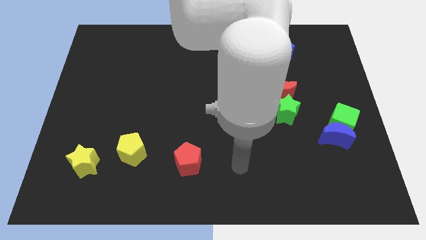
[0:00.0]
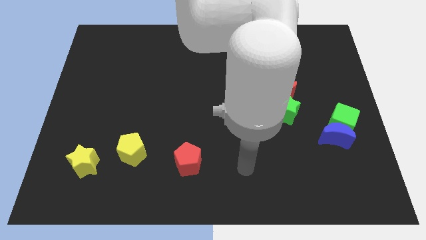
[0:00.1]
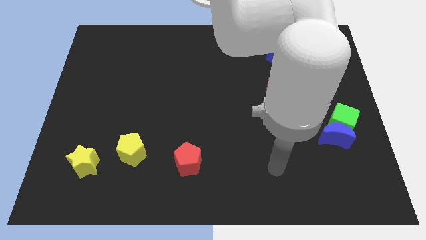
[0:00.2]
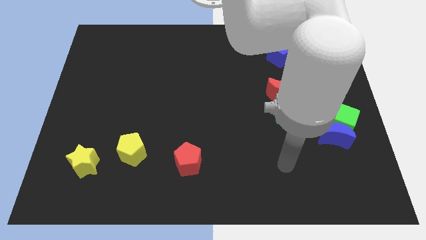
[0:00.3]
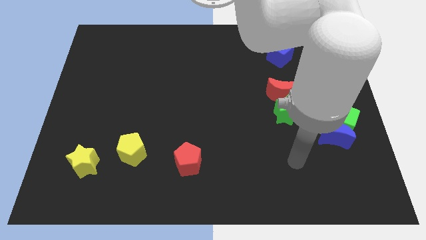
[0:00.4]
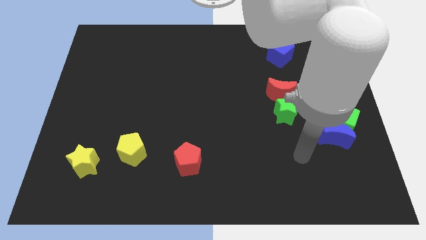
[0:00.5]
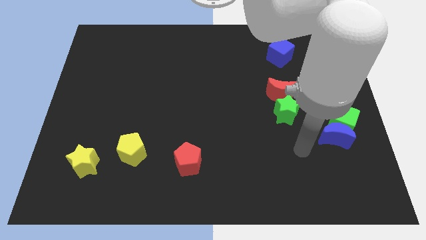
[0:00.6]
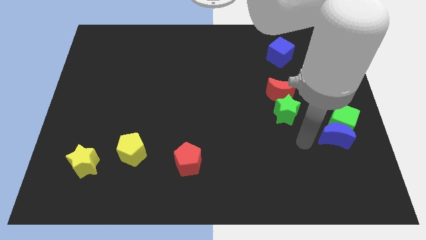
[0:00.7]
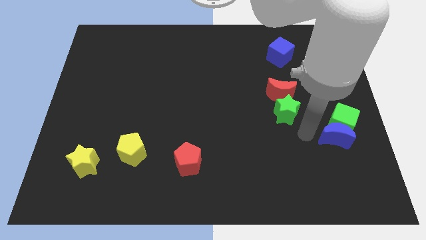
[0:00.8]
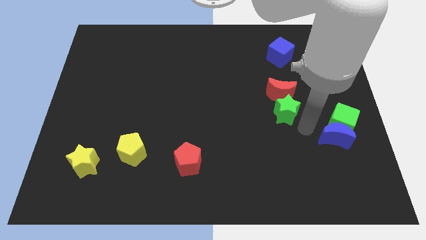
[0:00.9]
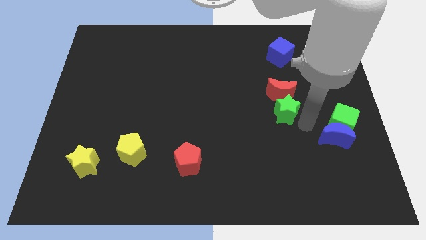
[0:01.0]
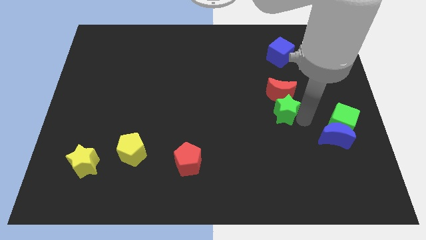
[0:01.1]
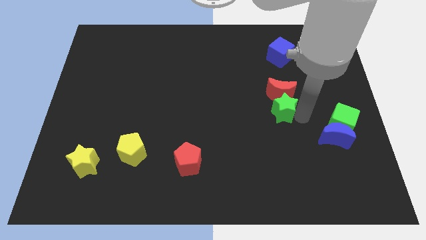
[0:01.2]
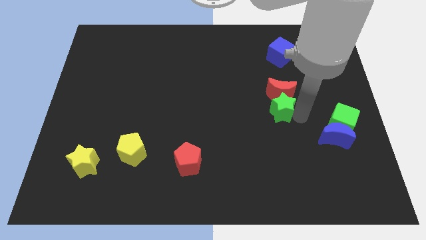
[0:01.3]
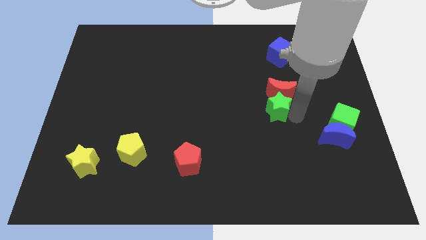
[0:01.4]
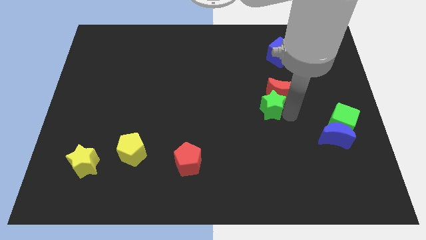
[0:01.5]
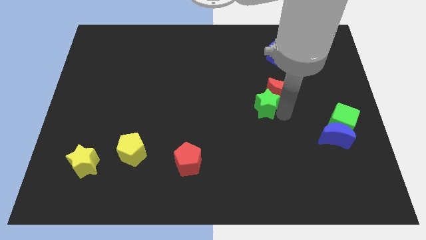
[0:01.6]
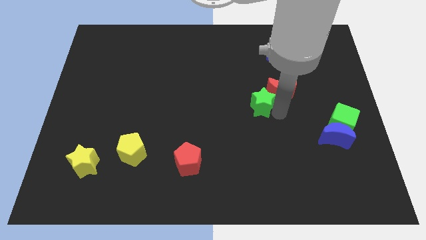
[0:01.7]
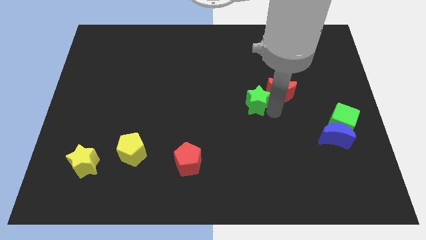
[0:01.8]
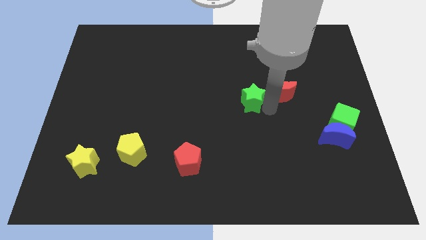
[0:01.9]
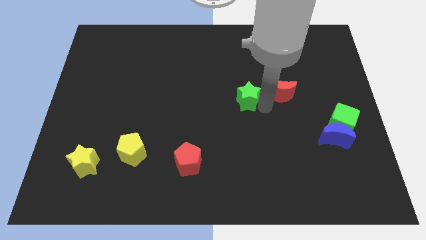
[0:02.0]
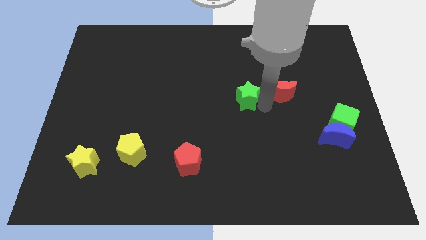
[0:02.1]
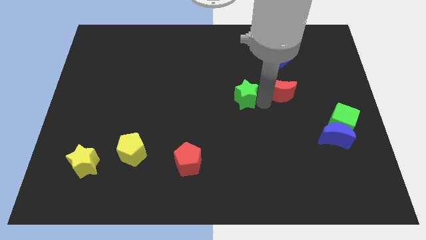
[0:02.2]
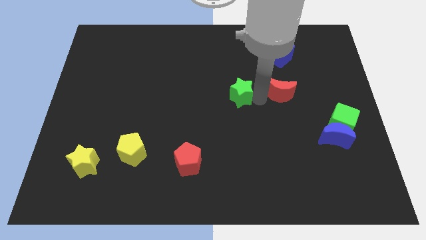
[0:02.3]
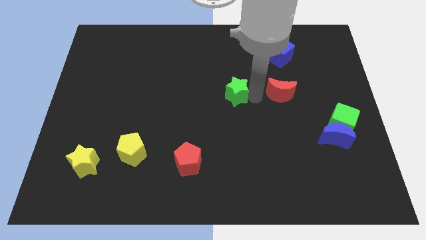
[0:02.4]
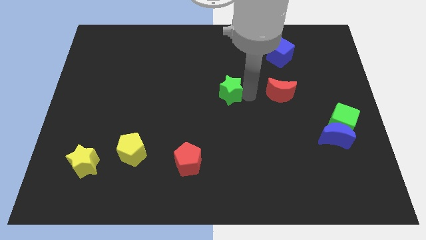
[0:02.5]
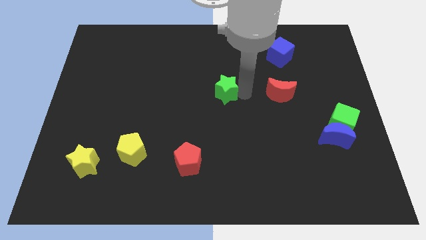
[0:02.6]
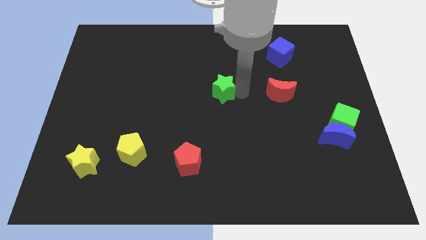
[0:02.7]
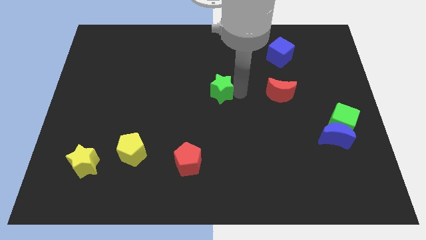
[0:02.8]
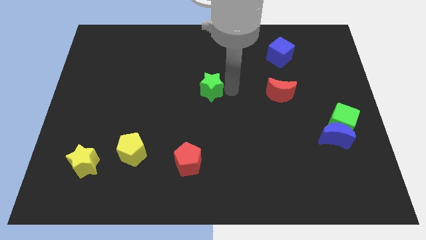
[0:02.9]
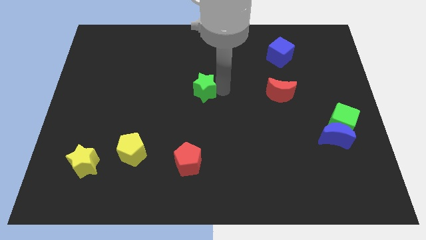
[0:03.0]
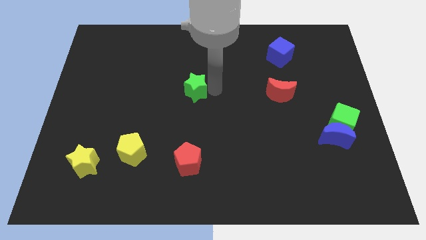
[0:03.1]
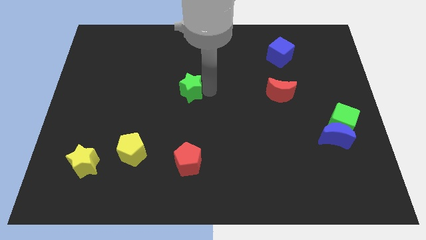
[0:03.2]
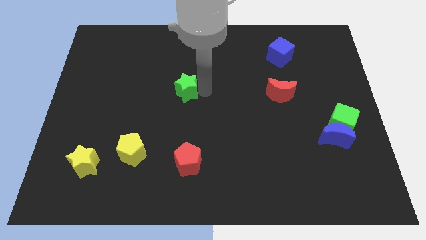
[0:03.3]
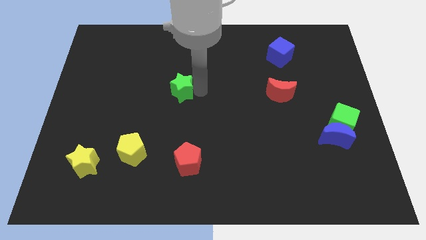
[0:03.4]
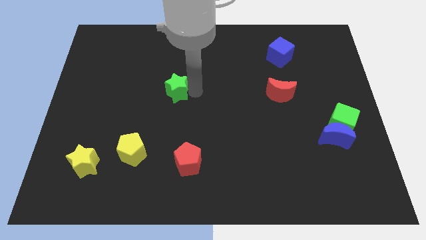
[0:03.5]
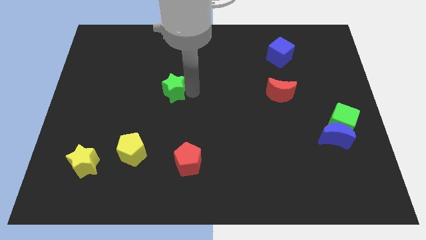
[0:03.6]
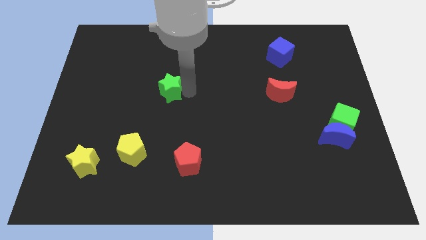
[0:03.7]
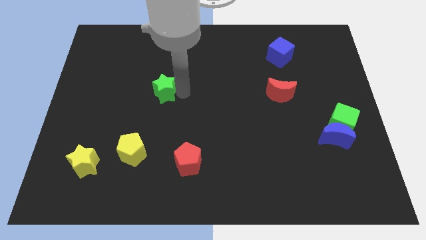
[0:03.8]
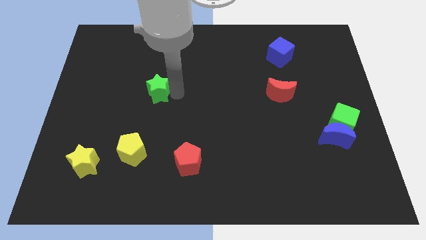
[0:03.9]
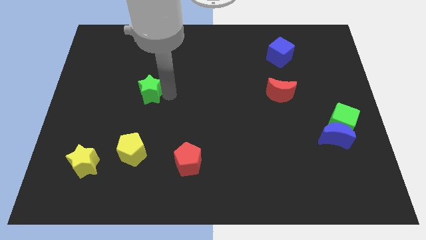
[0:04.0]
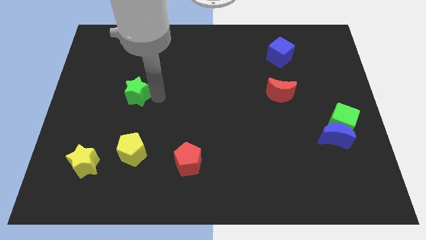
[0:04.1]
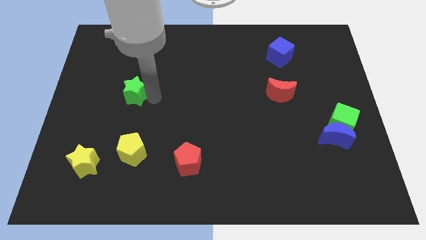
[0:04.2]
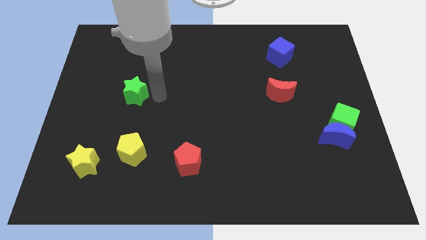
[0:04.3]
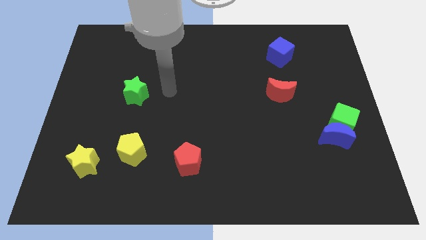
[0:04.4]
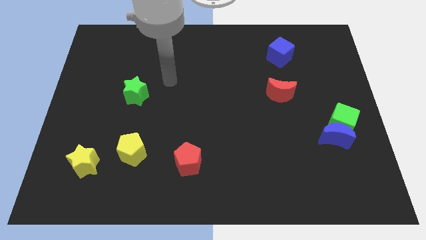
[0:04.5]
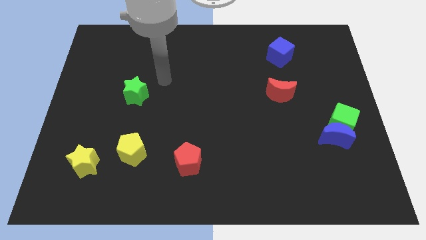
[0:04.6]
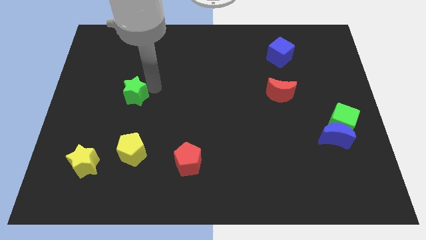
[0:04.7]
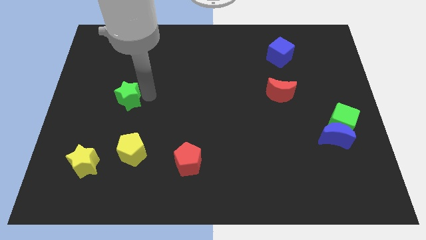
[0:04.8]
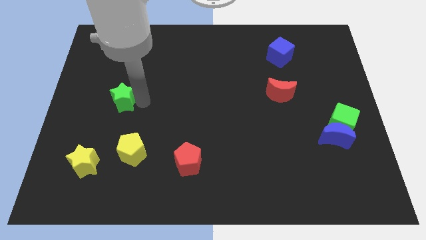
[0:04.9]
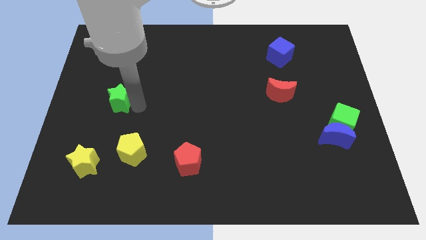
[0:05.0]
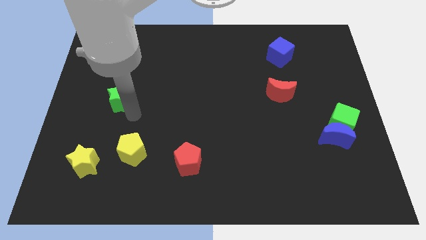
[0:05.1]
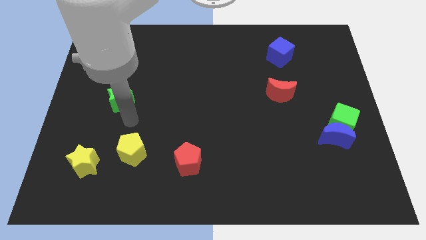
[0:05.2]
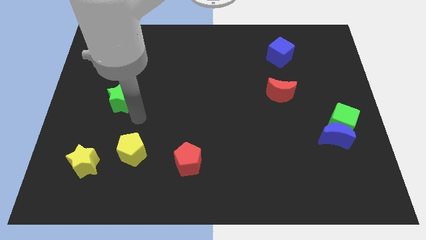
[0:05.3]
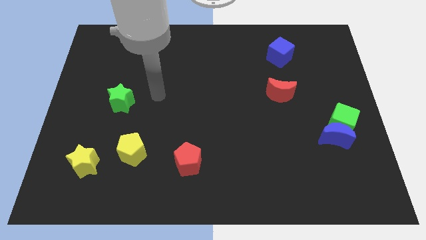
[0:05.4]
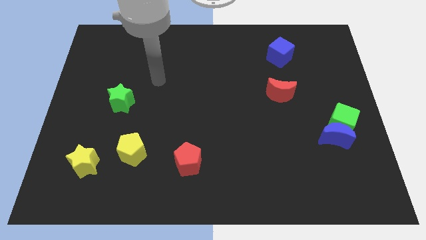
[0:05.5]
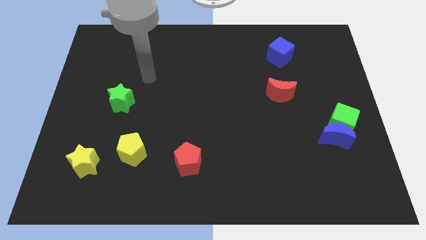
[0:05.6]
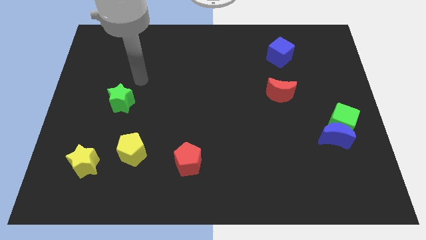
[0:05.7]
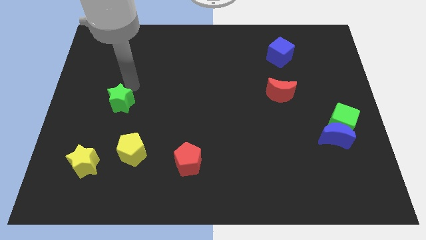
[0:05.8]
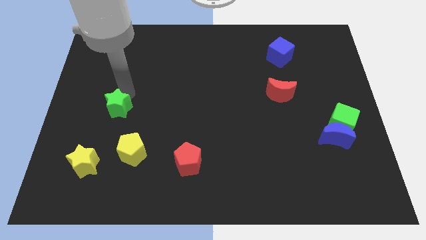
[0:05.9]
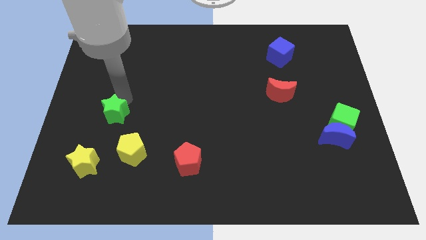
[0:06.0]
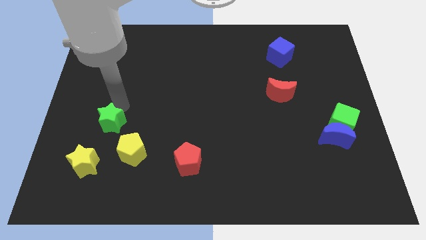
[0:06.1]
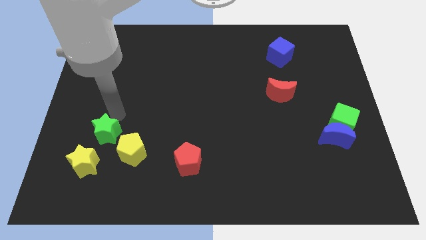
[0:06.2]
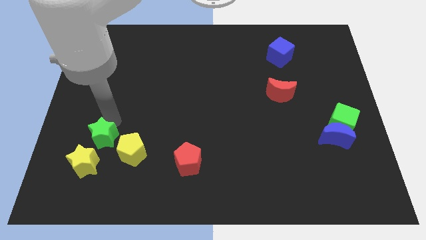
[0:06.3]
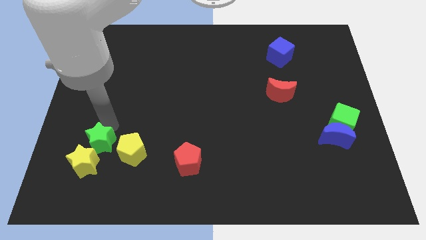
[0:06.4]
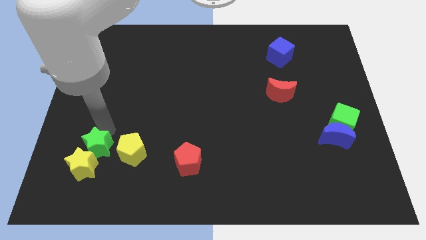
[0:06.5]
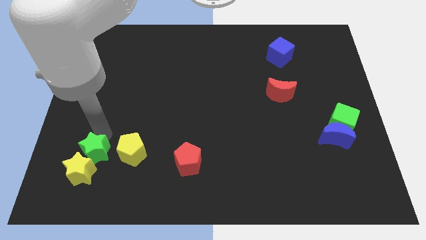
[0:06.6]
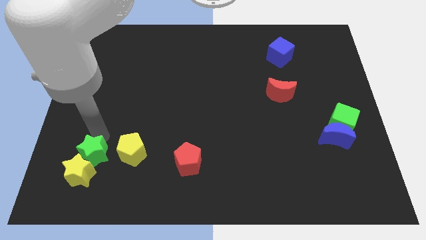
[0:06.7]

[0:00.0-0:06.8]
slide the green star to the yellow star

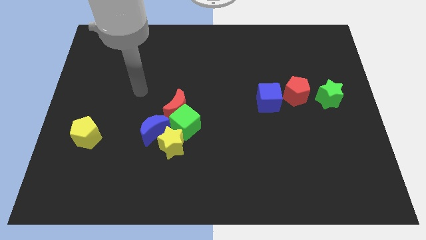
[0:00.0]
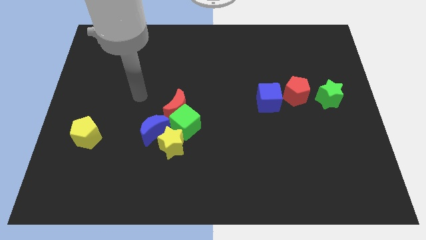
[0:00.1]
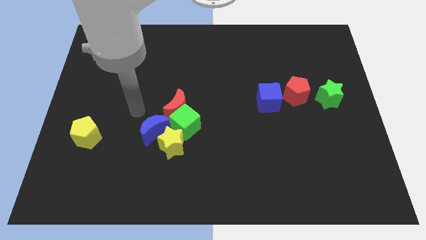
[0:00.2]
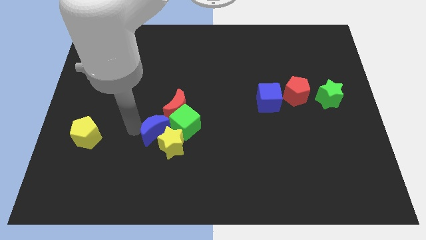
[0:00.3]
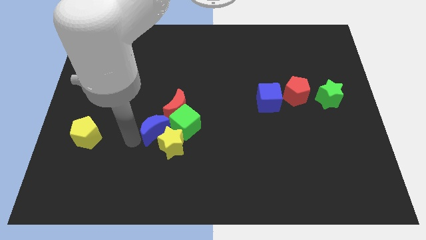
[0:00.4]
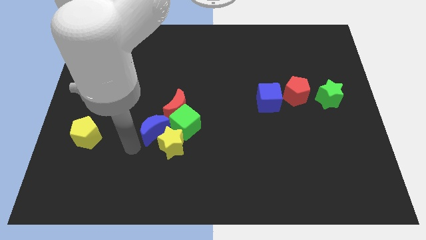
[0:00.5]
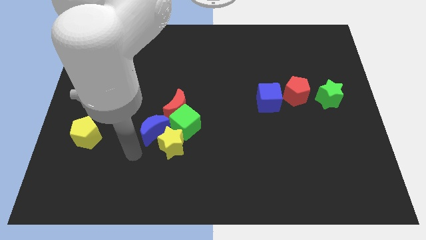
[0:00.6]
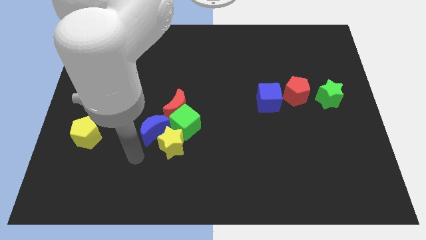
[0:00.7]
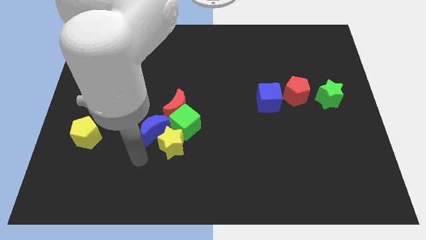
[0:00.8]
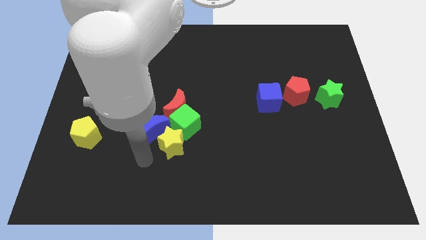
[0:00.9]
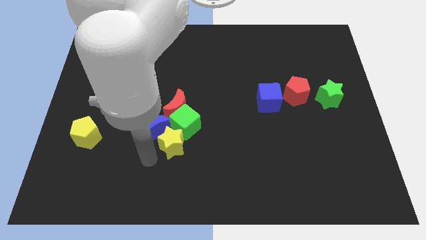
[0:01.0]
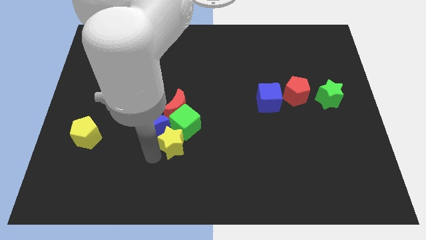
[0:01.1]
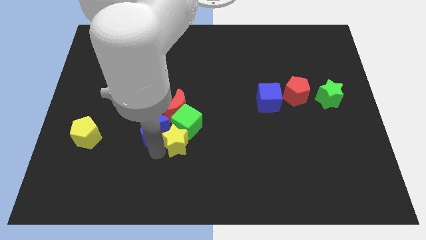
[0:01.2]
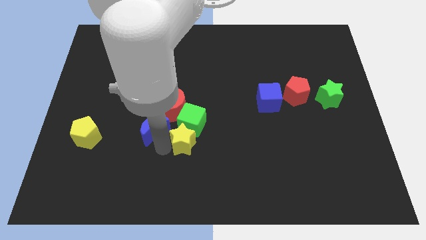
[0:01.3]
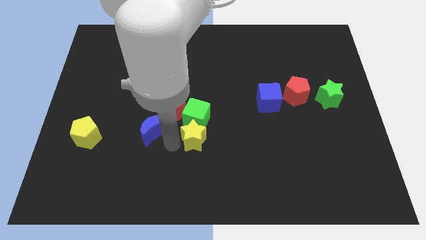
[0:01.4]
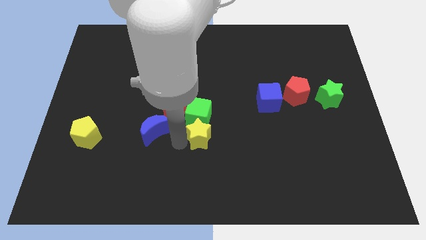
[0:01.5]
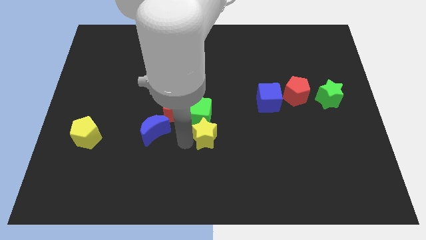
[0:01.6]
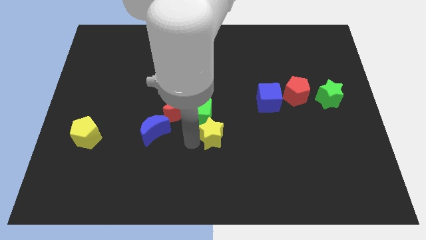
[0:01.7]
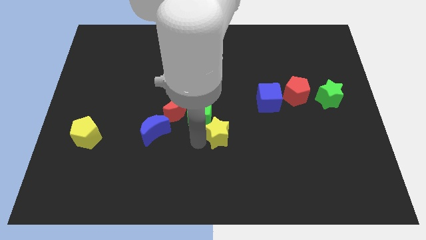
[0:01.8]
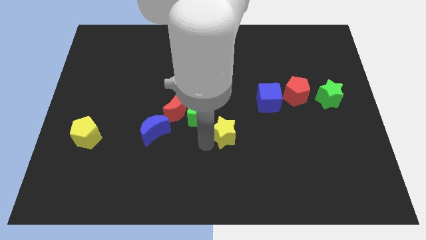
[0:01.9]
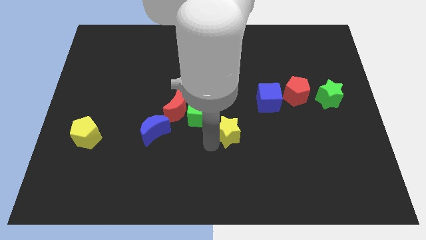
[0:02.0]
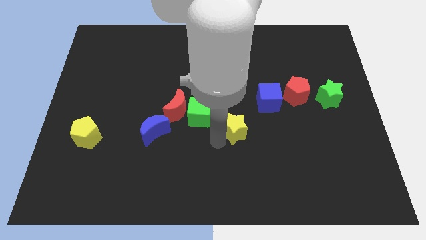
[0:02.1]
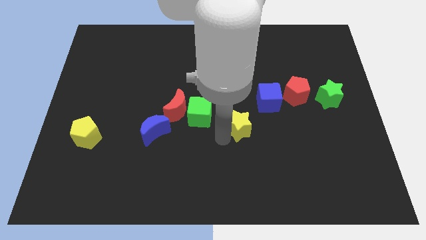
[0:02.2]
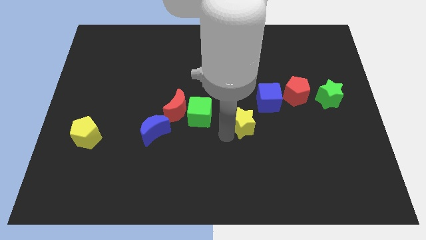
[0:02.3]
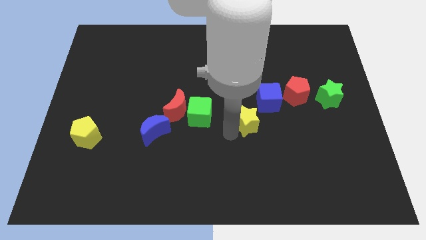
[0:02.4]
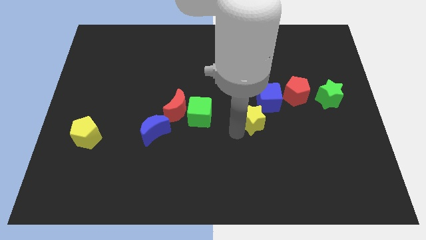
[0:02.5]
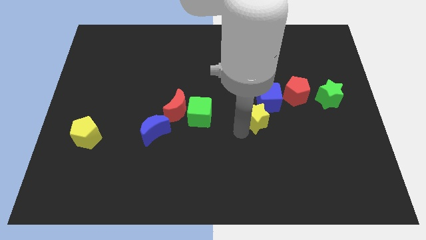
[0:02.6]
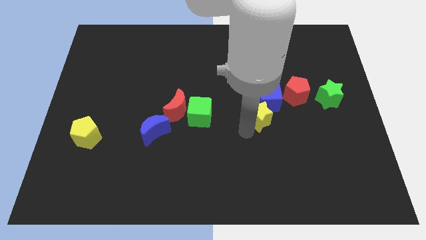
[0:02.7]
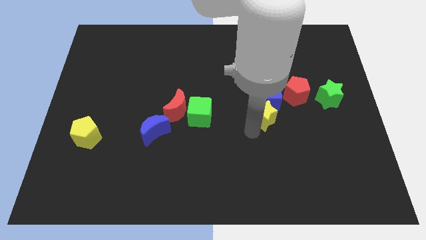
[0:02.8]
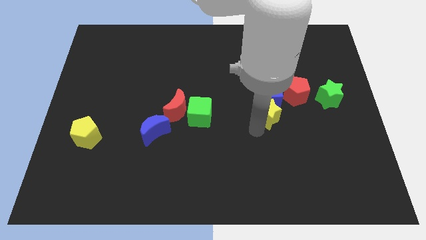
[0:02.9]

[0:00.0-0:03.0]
slide the yellow star to the blue cube
